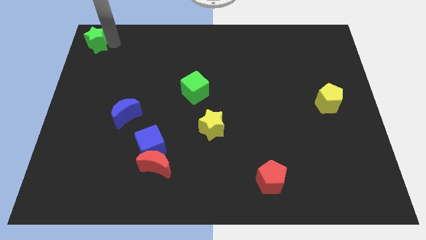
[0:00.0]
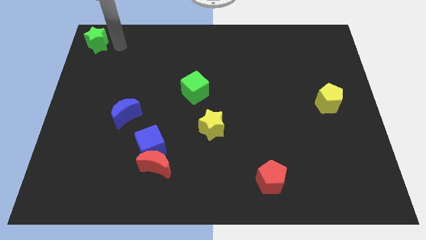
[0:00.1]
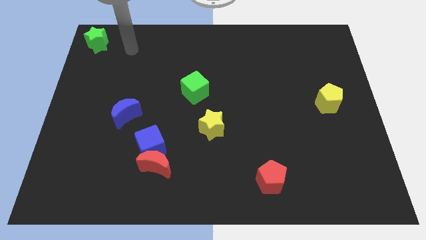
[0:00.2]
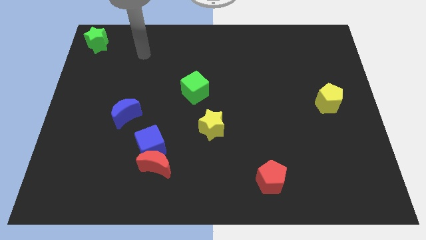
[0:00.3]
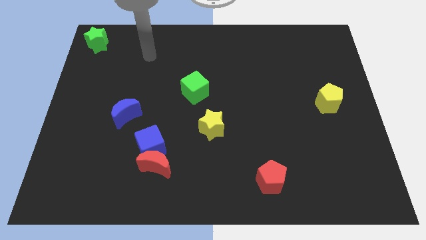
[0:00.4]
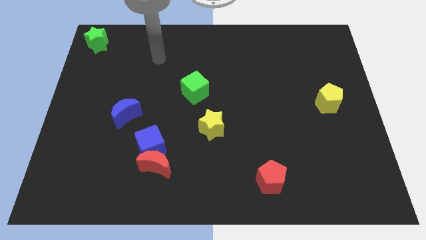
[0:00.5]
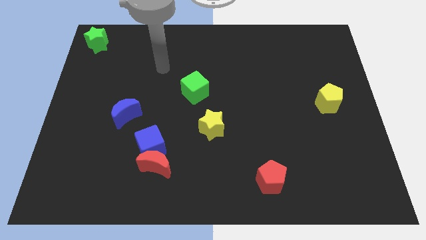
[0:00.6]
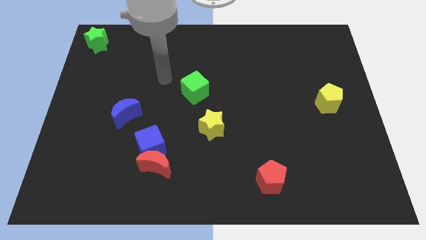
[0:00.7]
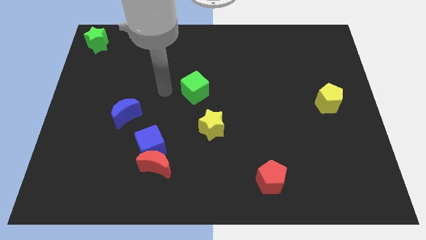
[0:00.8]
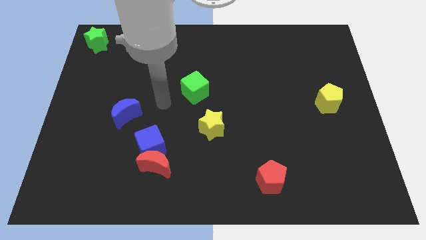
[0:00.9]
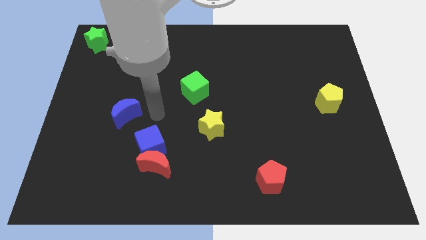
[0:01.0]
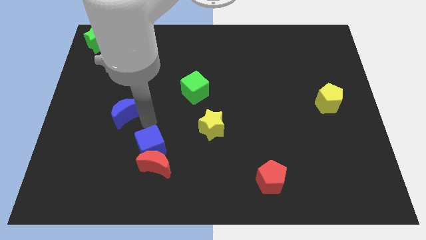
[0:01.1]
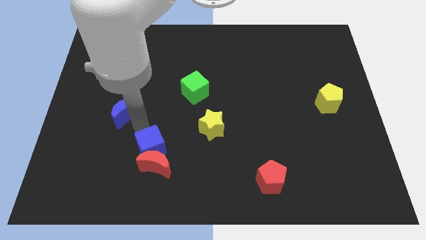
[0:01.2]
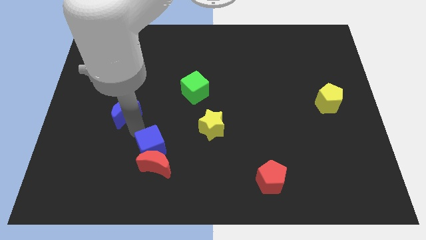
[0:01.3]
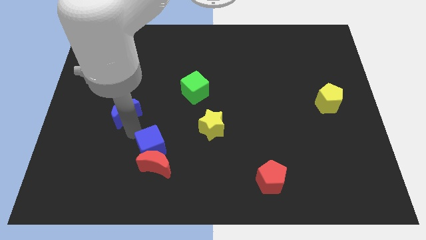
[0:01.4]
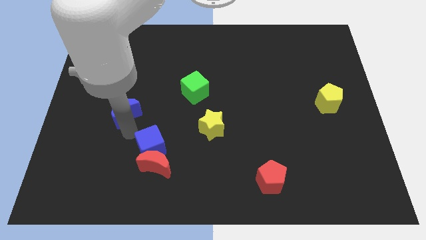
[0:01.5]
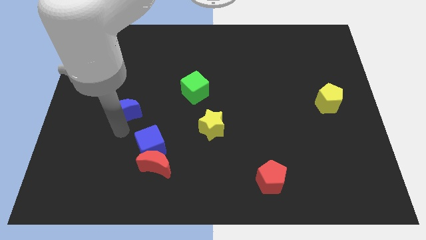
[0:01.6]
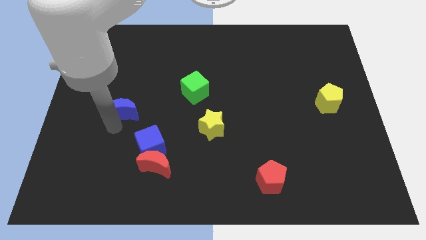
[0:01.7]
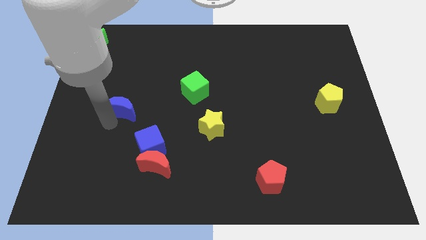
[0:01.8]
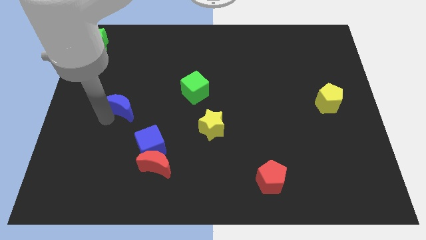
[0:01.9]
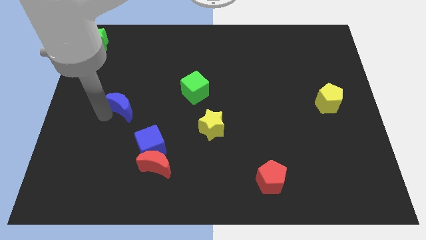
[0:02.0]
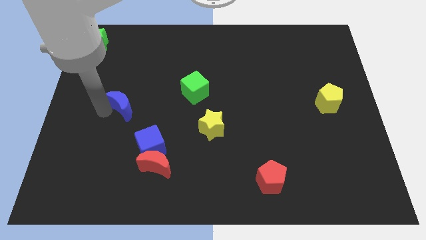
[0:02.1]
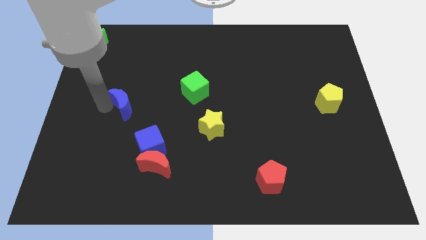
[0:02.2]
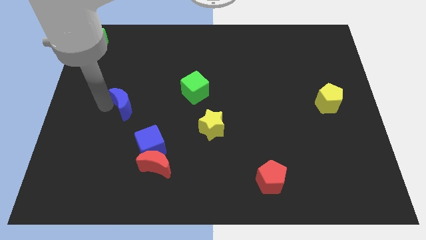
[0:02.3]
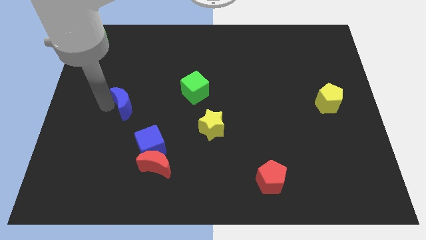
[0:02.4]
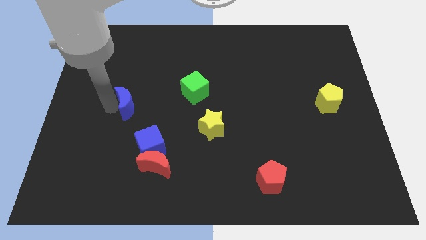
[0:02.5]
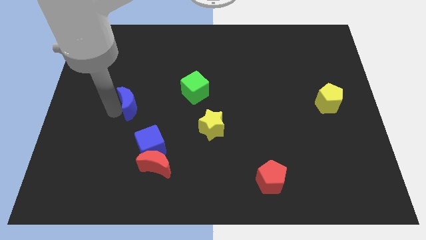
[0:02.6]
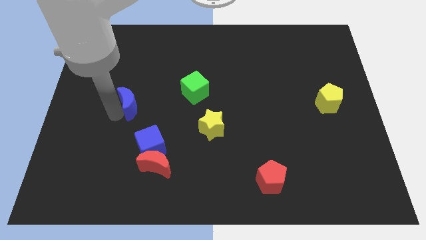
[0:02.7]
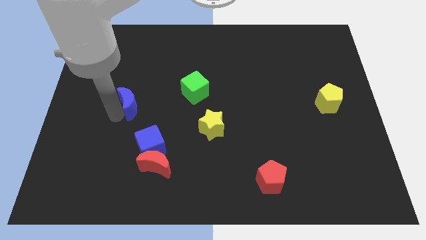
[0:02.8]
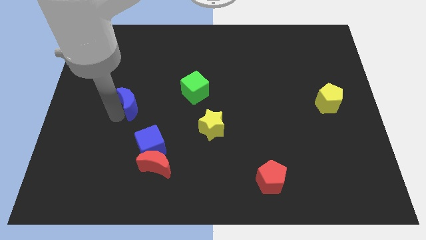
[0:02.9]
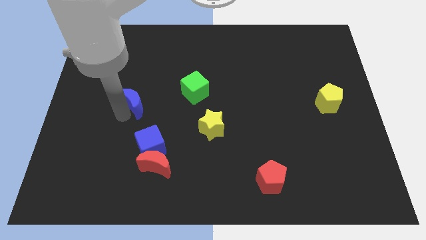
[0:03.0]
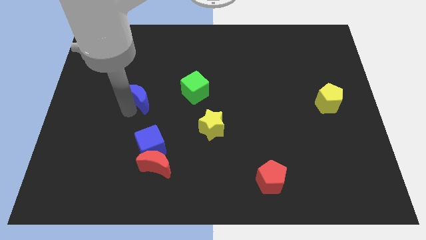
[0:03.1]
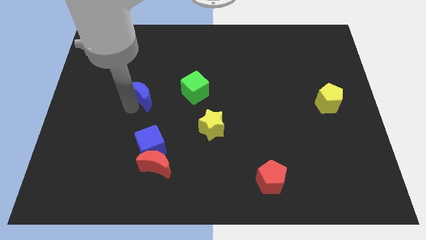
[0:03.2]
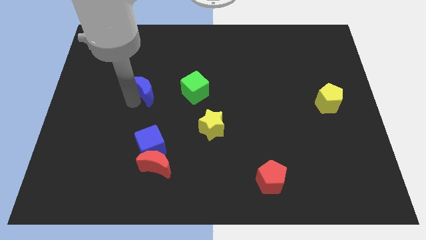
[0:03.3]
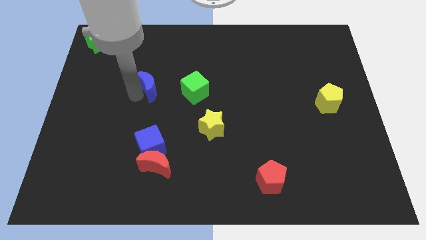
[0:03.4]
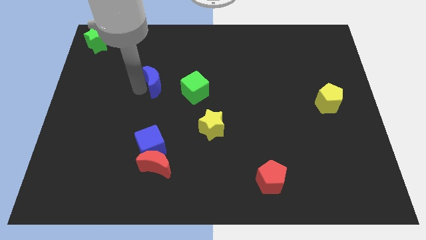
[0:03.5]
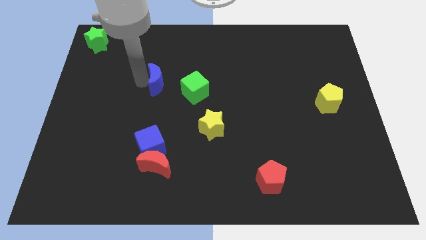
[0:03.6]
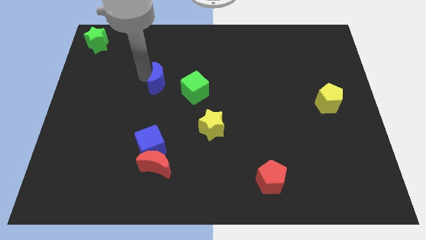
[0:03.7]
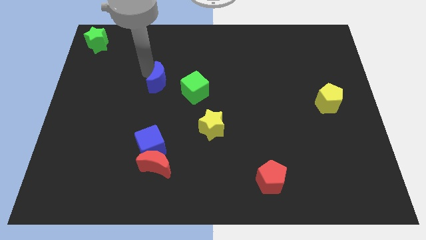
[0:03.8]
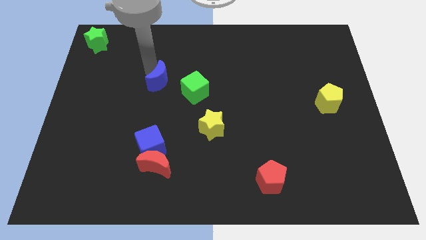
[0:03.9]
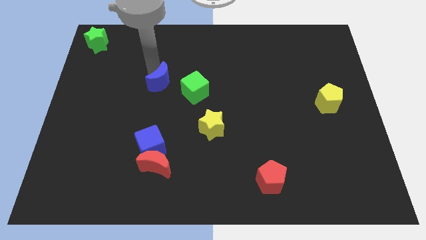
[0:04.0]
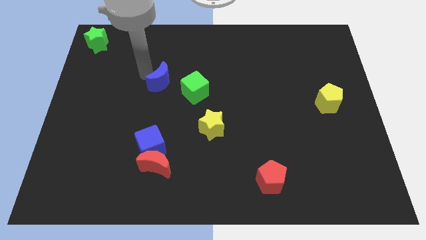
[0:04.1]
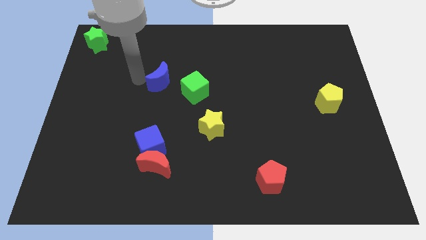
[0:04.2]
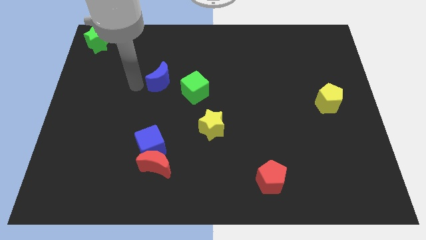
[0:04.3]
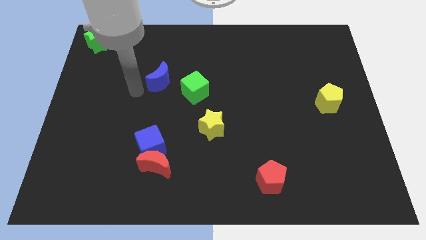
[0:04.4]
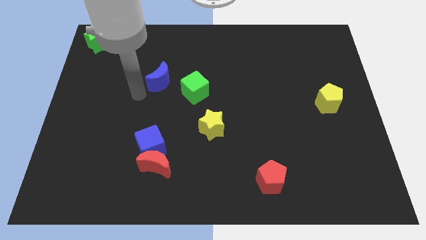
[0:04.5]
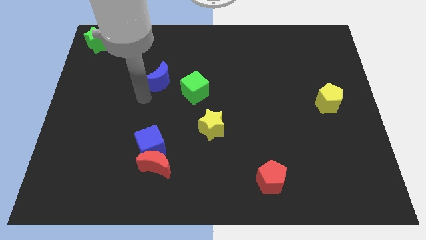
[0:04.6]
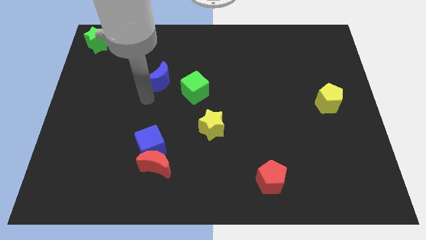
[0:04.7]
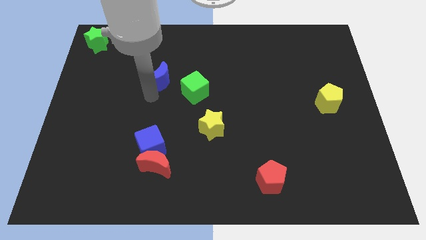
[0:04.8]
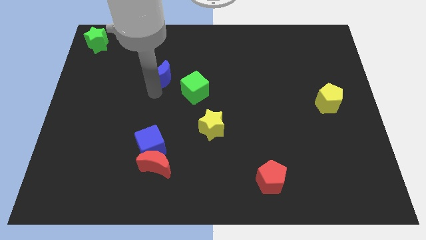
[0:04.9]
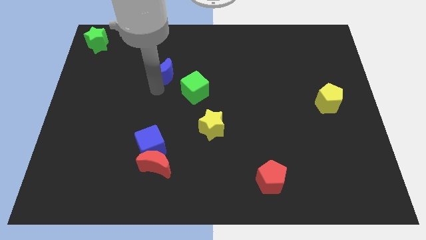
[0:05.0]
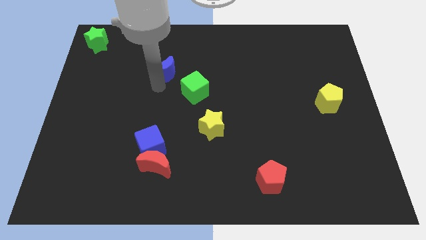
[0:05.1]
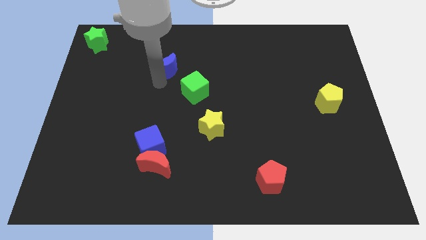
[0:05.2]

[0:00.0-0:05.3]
place the blue moon in between the green cube and green star

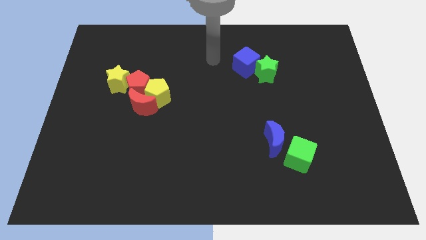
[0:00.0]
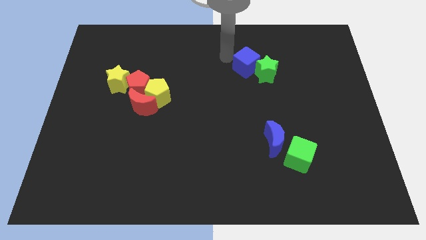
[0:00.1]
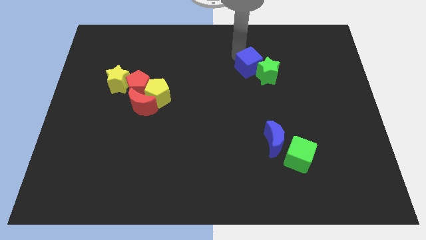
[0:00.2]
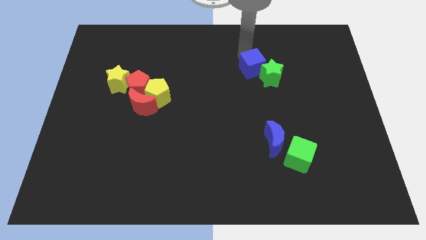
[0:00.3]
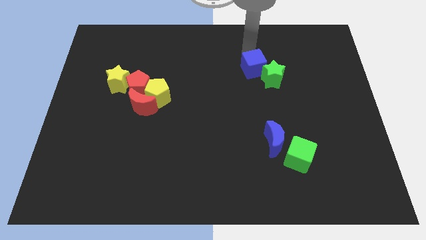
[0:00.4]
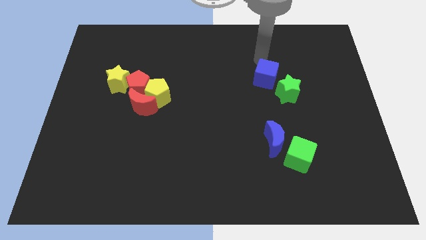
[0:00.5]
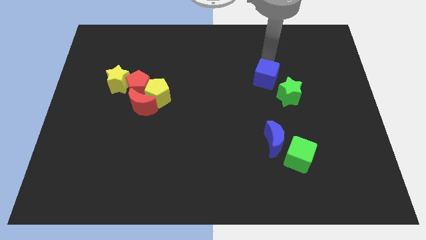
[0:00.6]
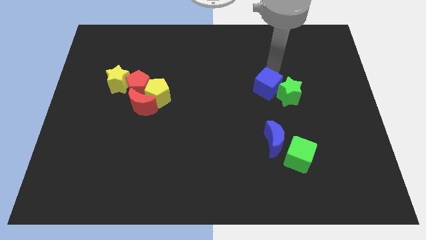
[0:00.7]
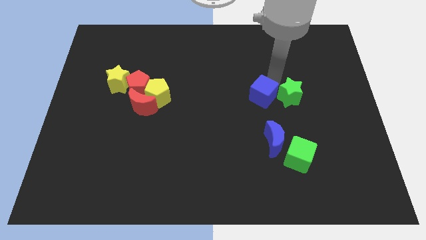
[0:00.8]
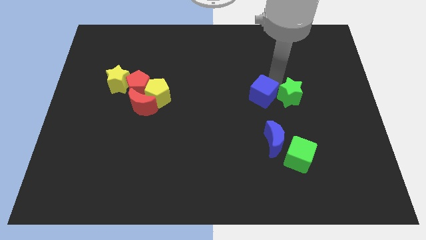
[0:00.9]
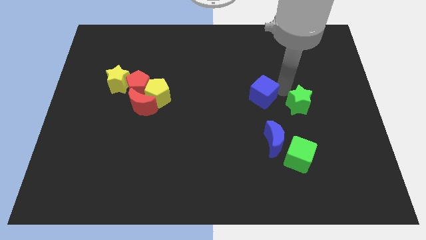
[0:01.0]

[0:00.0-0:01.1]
push the blue cube to the top of the blue crescent

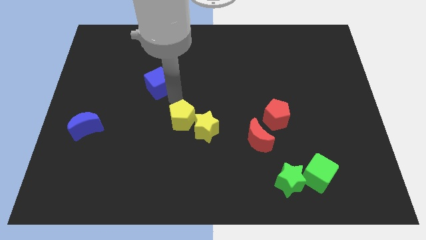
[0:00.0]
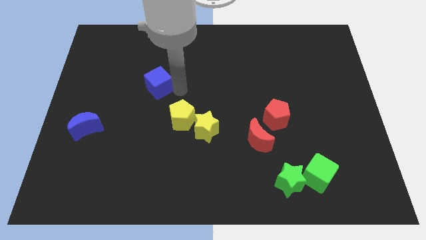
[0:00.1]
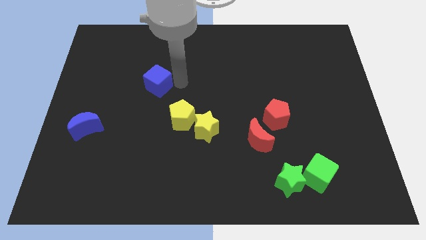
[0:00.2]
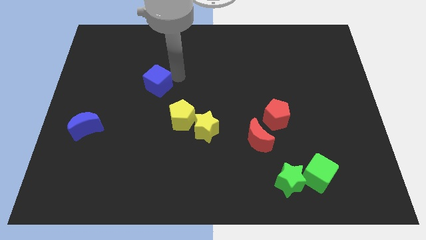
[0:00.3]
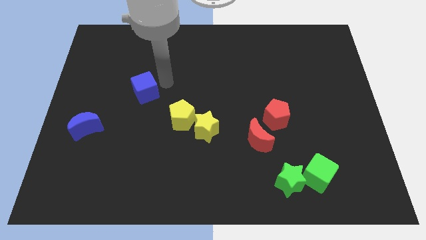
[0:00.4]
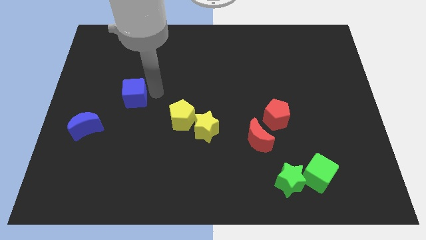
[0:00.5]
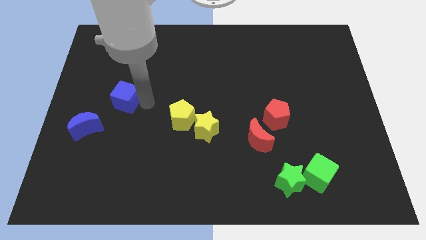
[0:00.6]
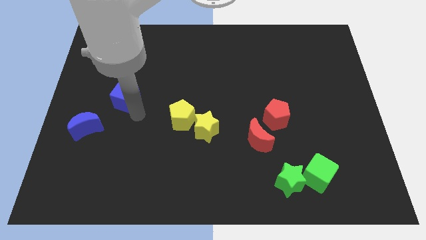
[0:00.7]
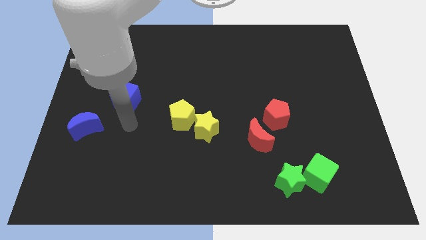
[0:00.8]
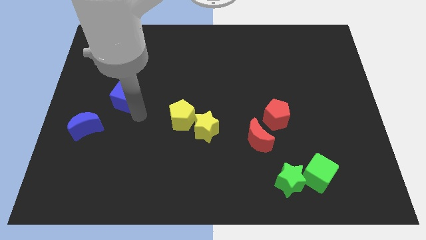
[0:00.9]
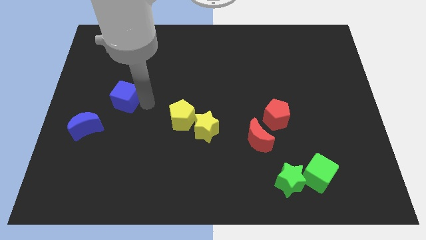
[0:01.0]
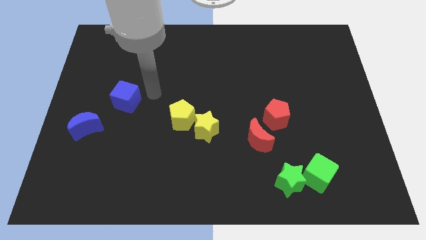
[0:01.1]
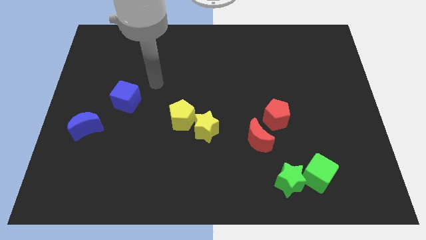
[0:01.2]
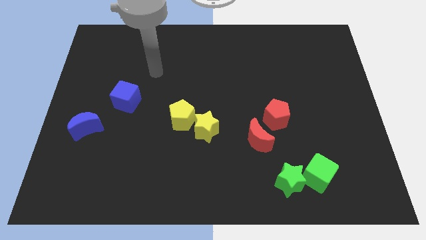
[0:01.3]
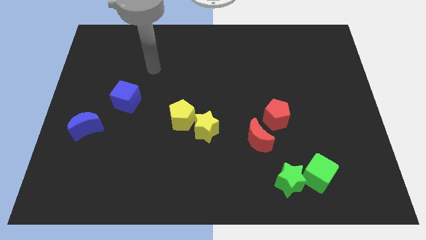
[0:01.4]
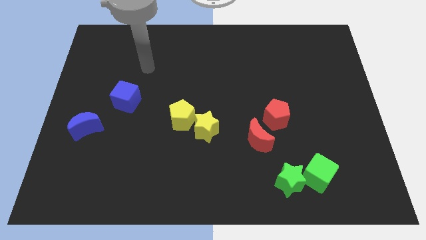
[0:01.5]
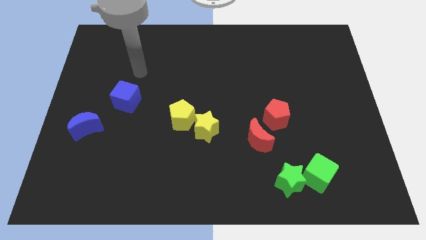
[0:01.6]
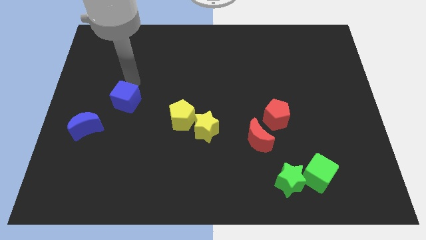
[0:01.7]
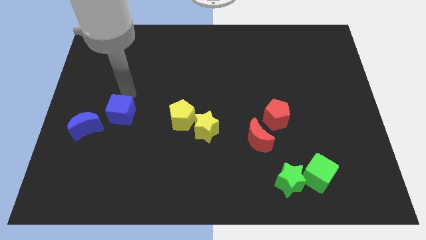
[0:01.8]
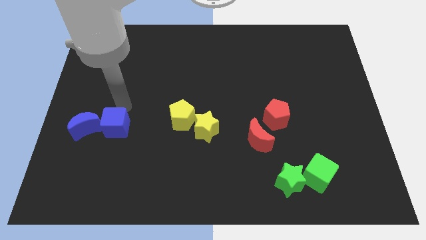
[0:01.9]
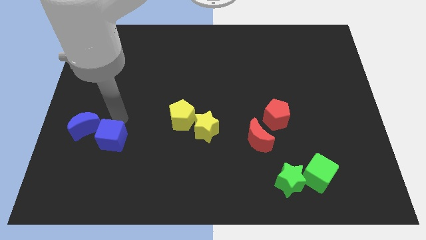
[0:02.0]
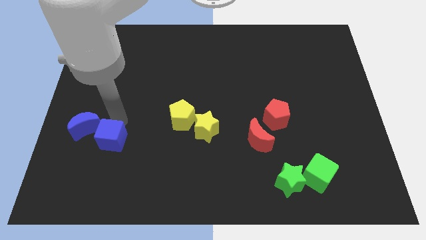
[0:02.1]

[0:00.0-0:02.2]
move the blue cube close to the blue crescent

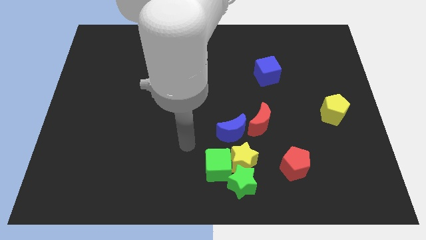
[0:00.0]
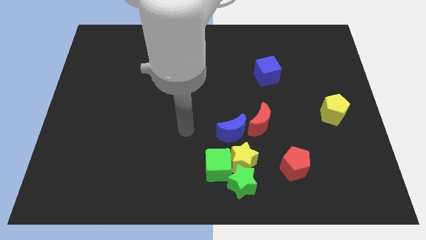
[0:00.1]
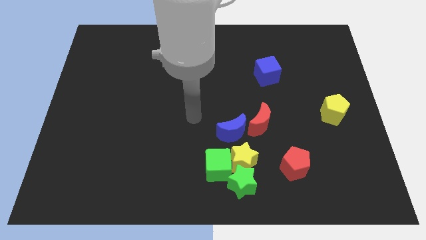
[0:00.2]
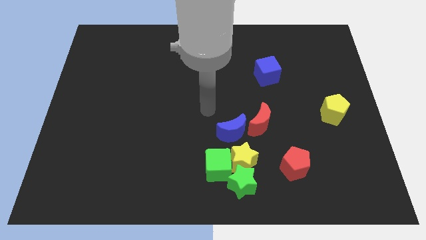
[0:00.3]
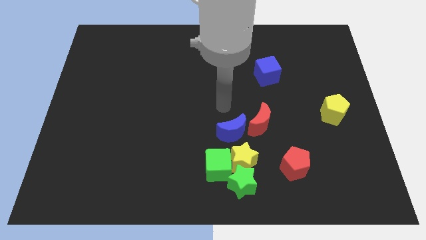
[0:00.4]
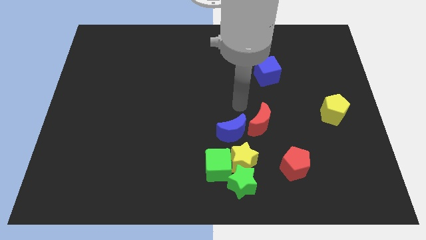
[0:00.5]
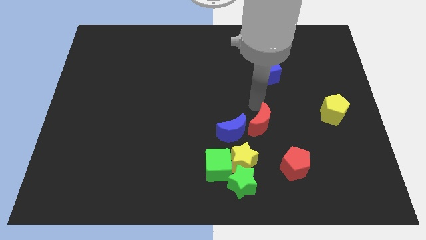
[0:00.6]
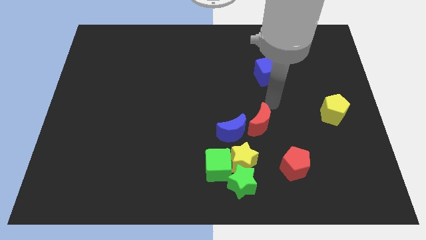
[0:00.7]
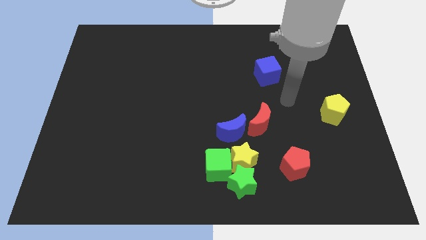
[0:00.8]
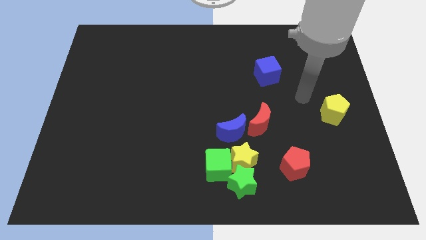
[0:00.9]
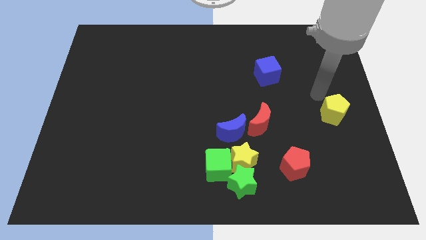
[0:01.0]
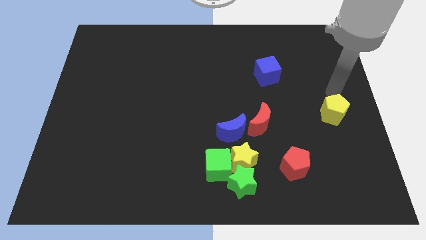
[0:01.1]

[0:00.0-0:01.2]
place your hand above the yellow pentagon
